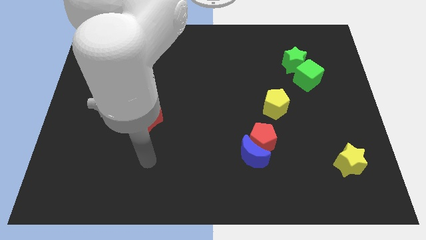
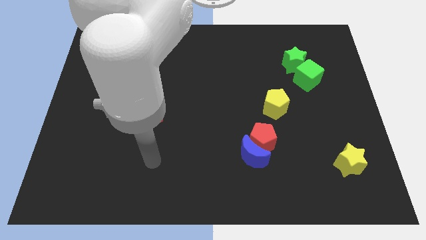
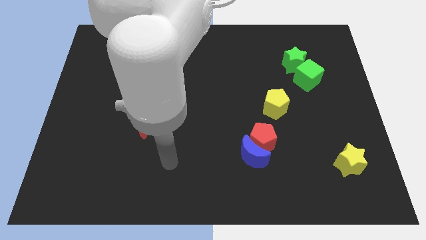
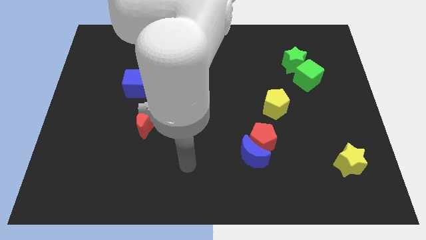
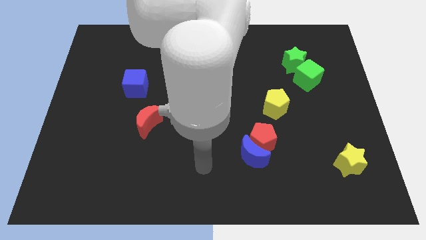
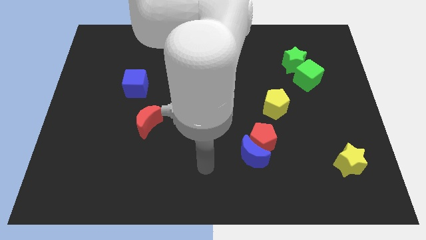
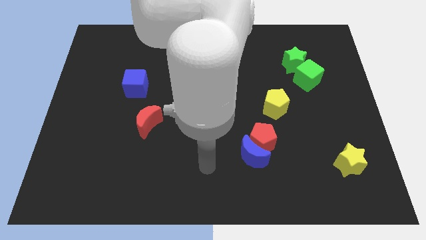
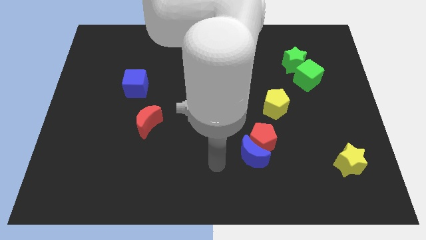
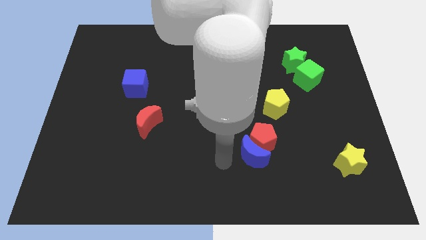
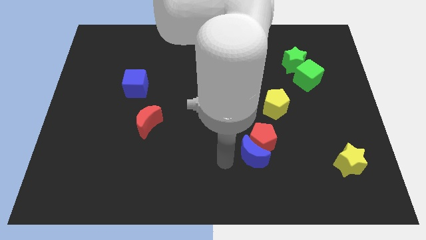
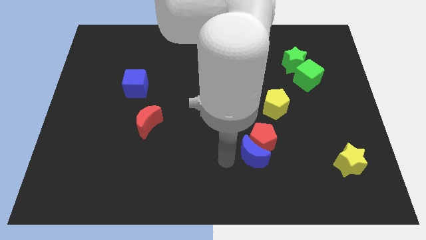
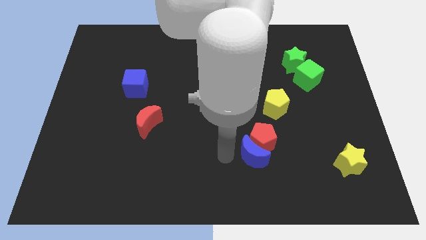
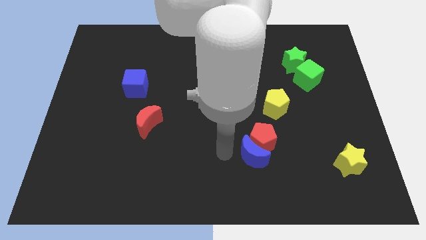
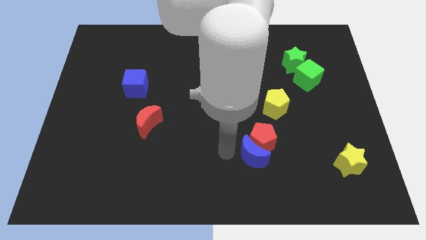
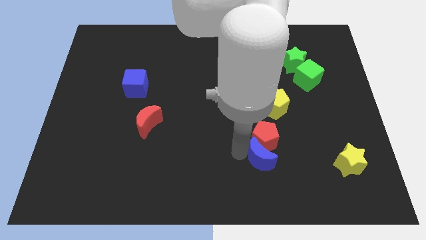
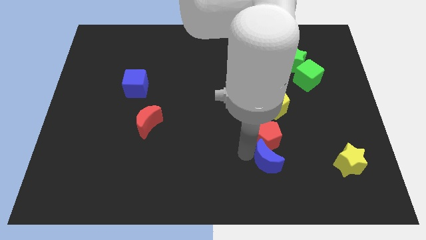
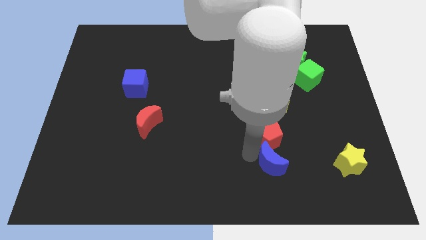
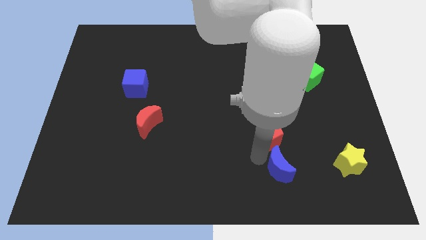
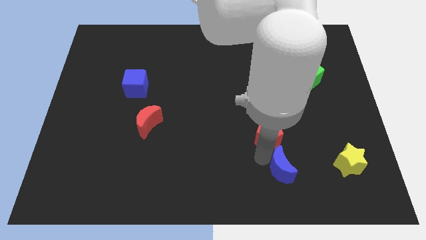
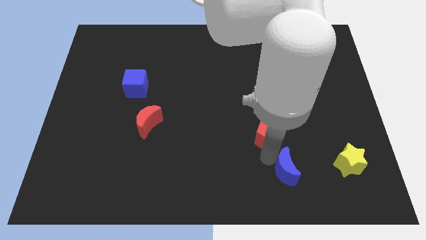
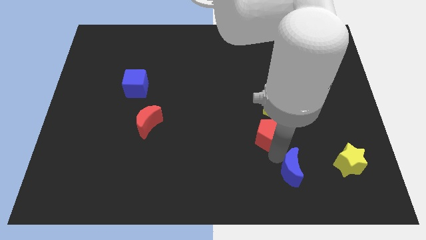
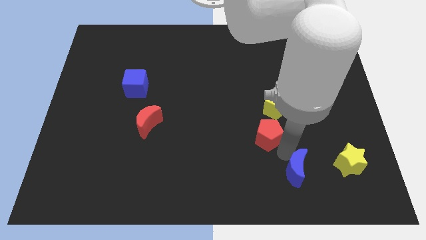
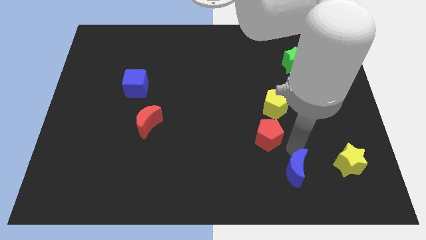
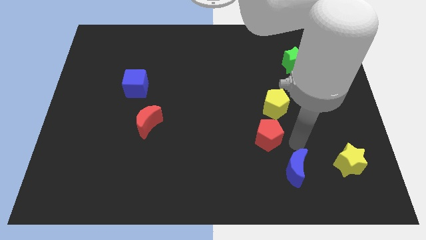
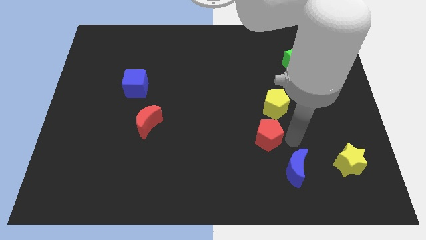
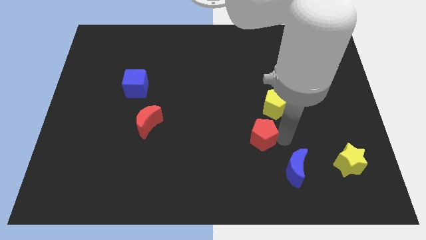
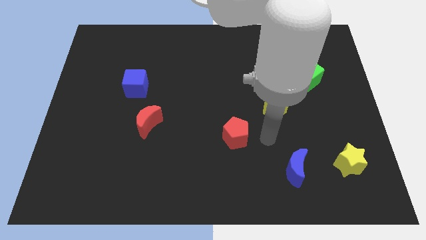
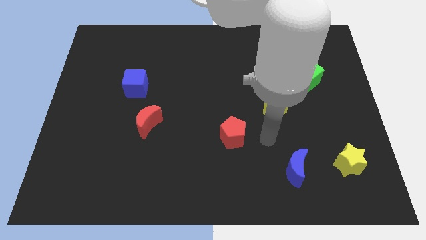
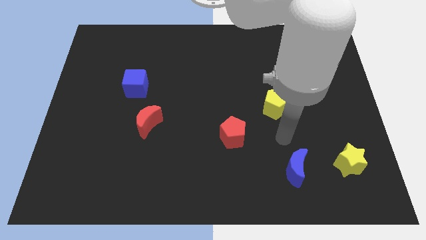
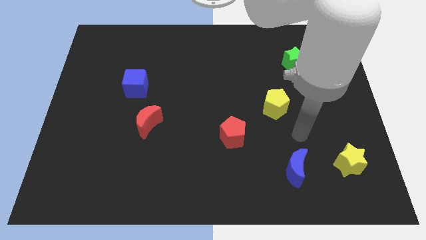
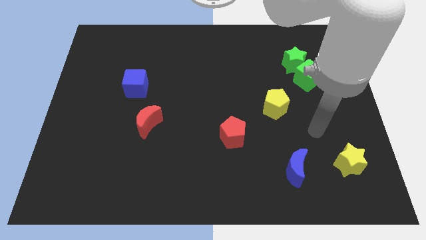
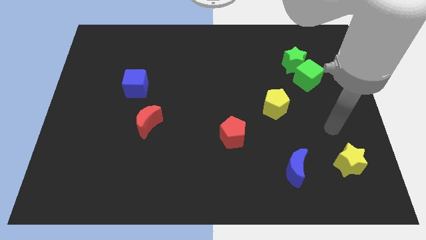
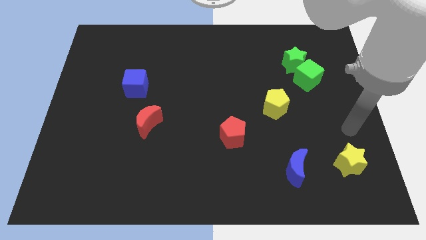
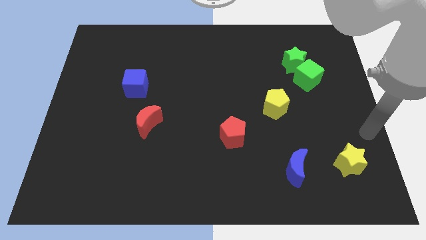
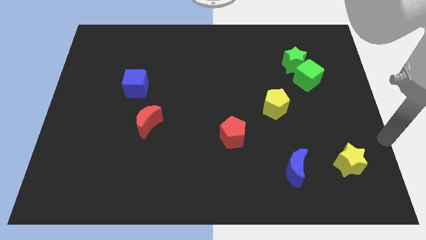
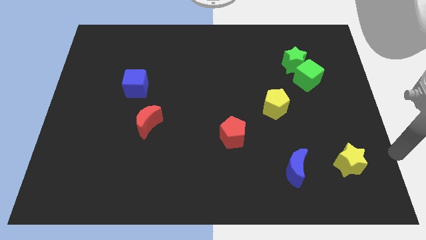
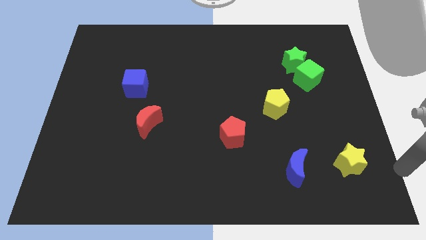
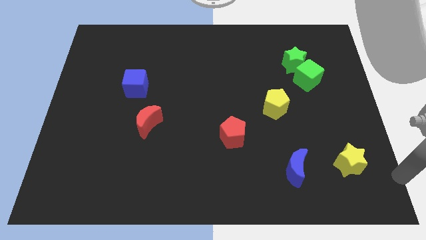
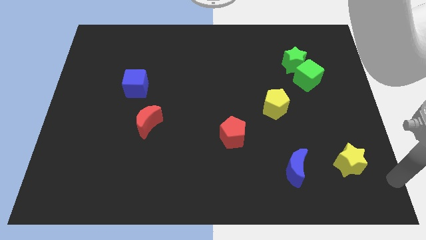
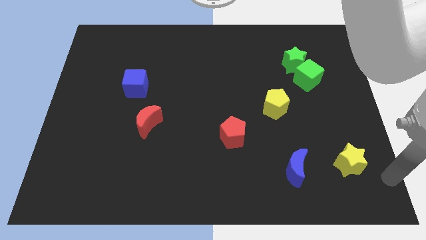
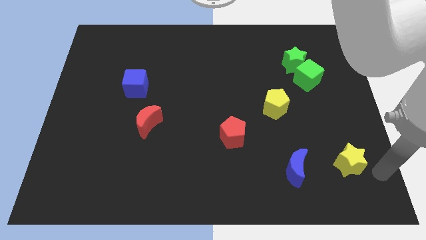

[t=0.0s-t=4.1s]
move the blue crescent towards the right bottom of the board

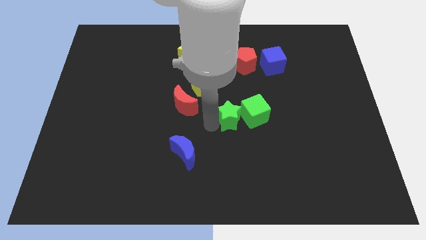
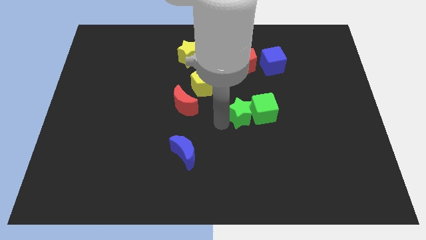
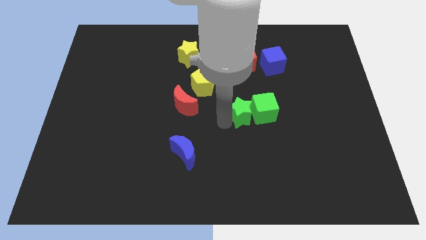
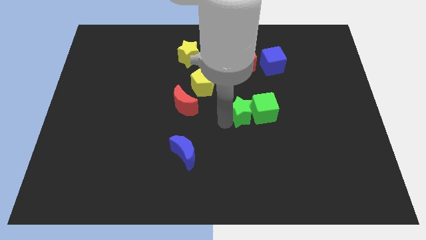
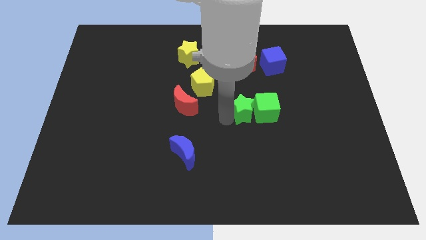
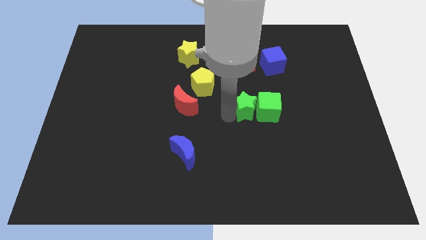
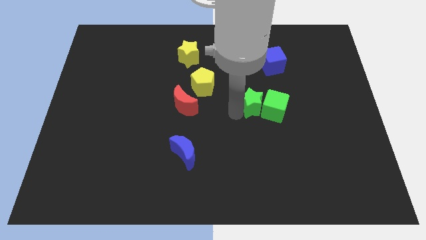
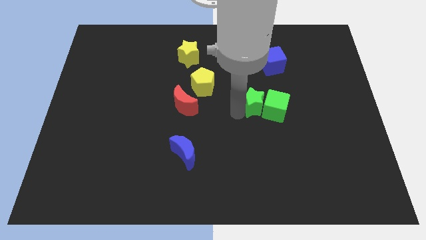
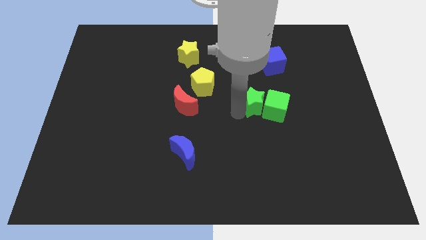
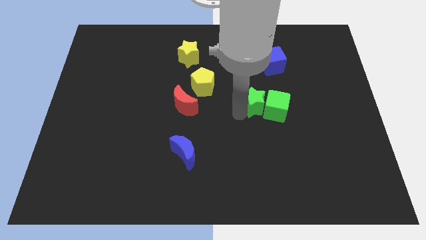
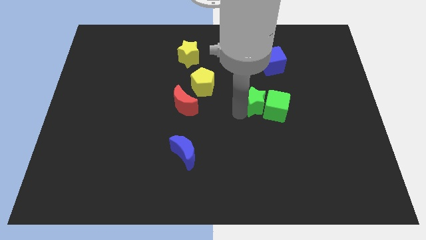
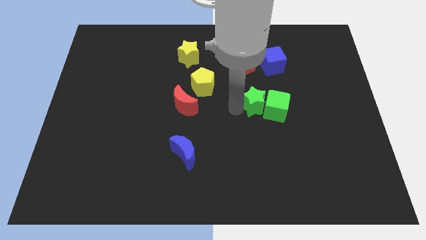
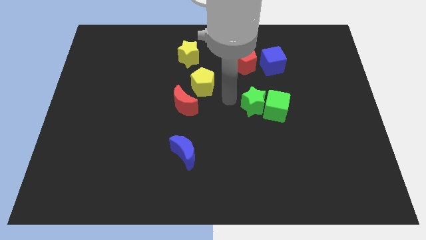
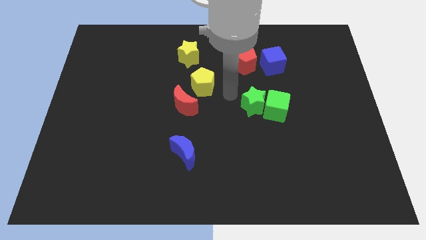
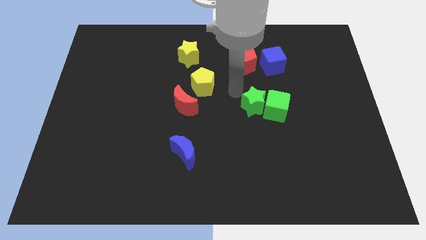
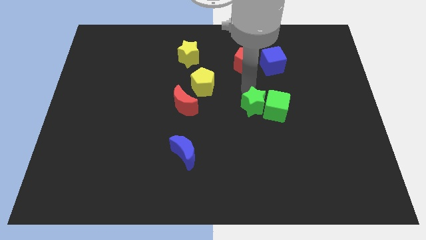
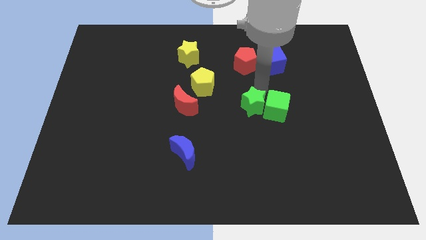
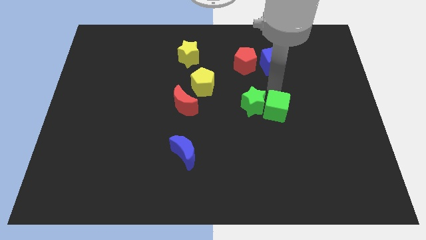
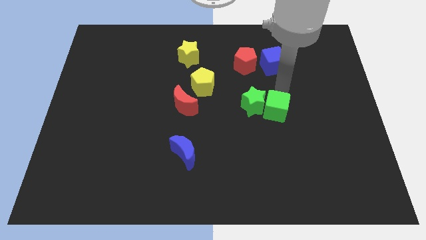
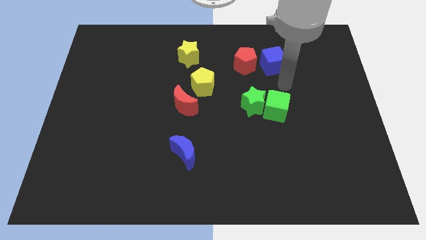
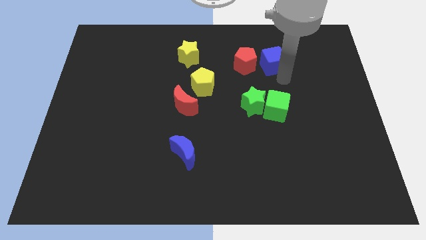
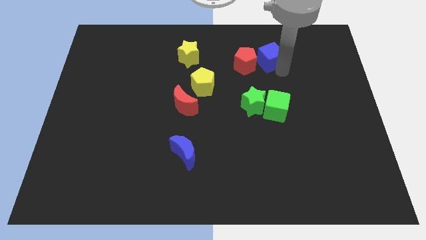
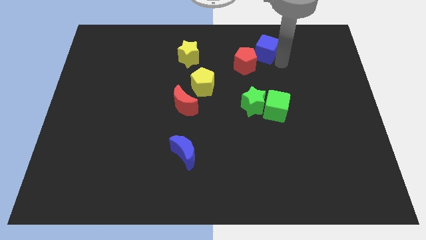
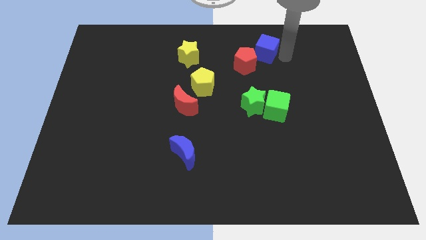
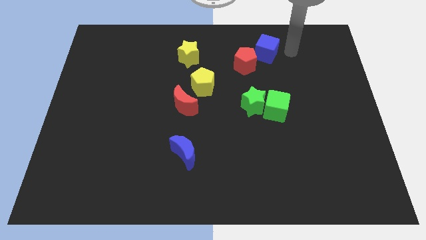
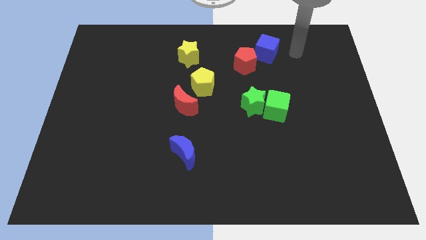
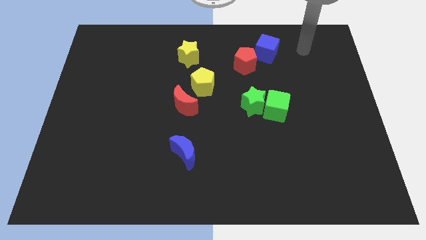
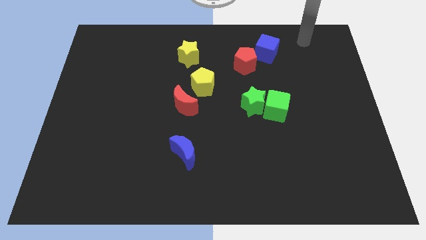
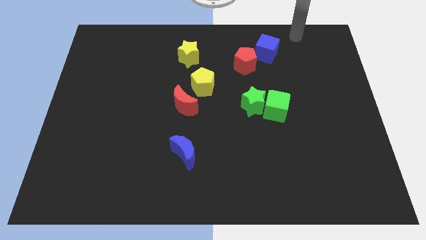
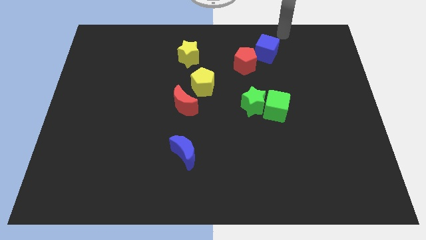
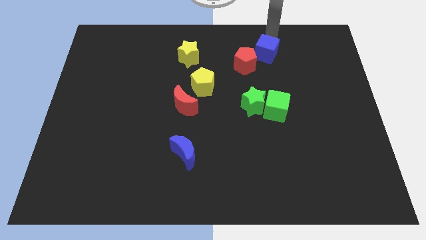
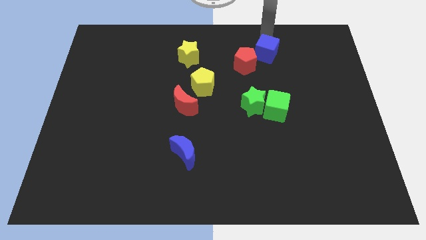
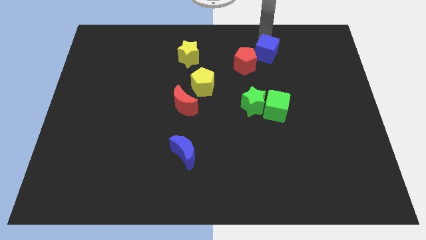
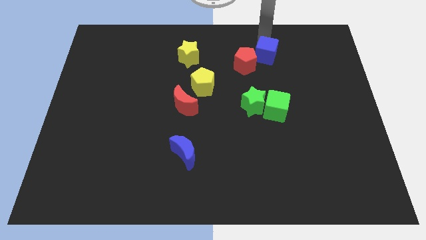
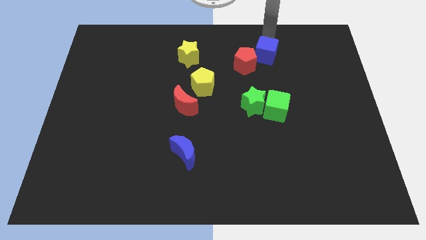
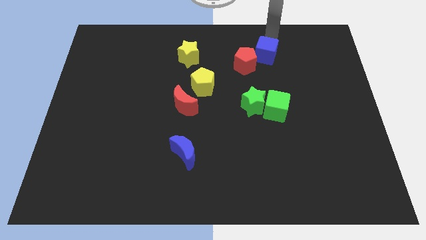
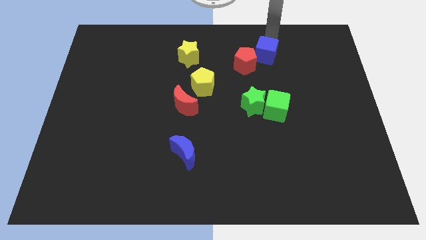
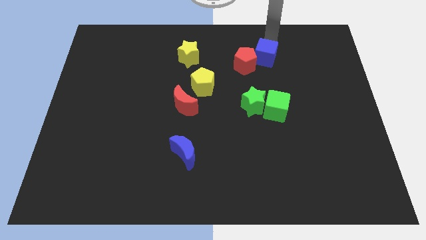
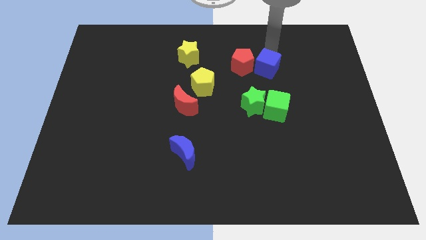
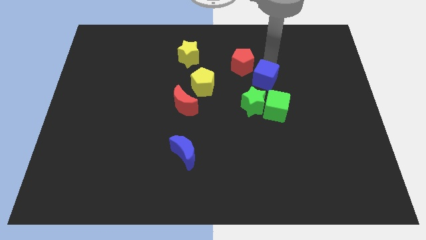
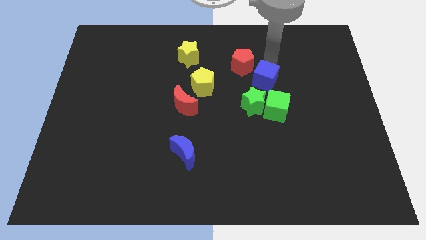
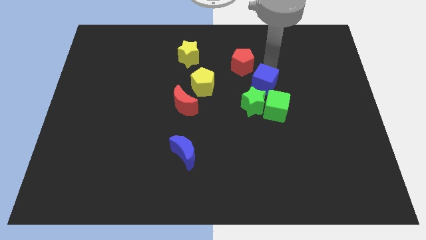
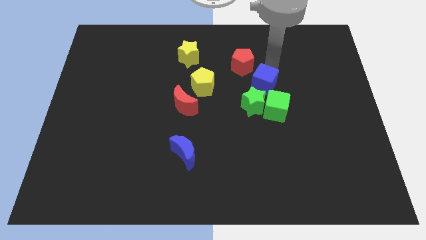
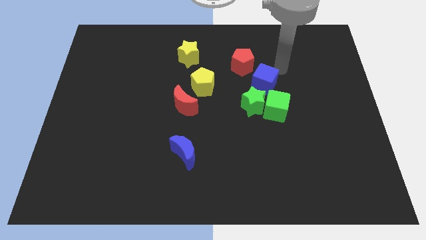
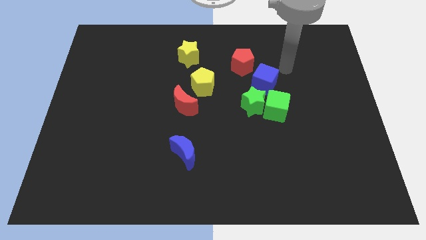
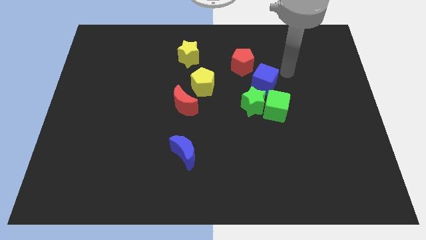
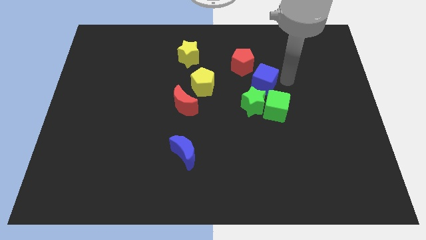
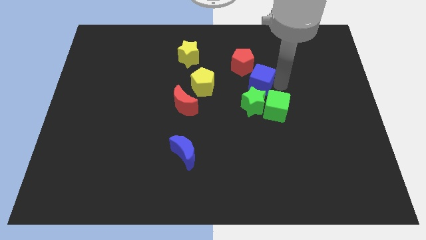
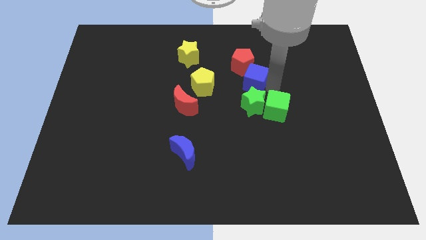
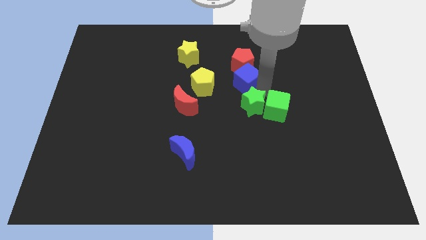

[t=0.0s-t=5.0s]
push the blue cube between the green star and red pentagon
